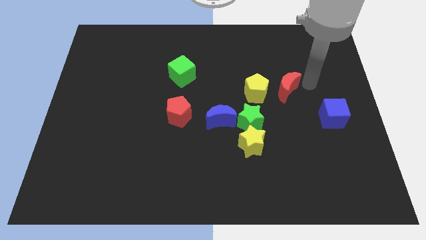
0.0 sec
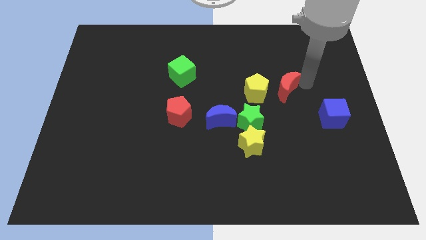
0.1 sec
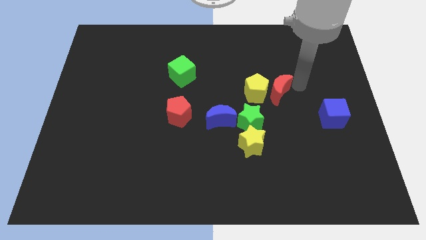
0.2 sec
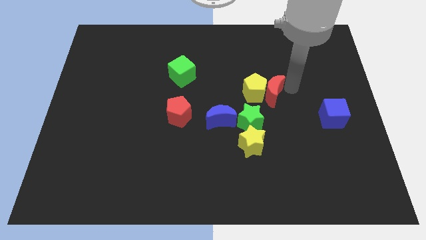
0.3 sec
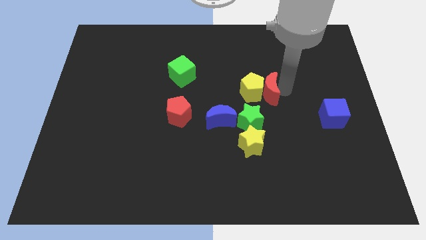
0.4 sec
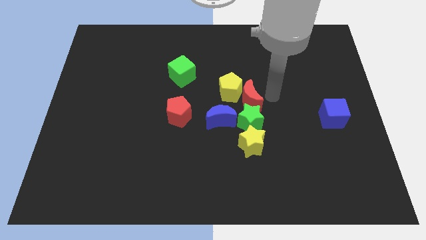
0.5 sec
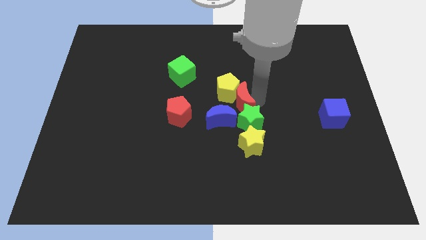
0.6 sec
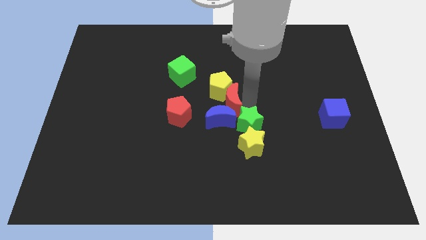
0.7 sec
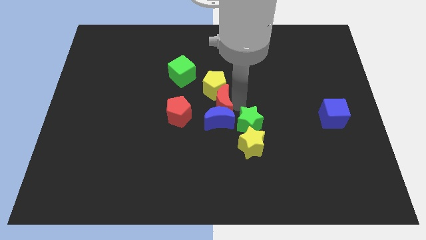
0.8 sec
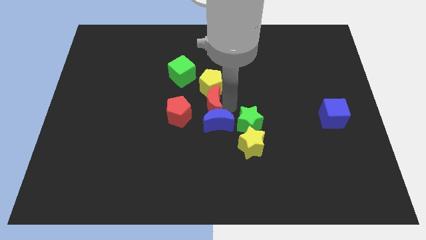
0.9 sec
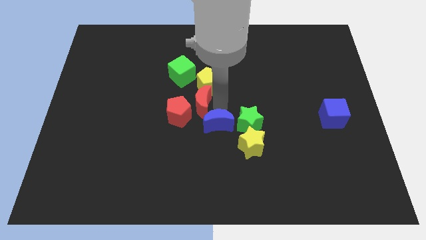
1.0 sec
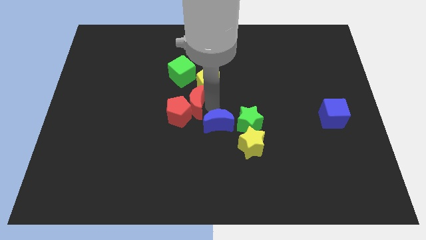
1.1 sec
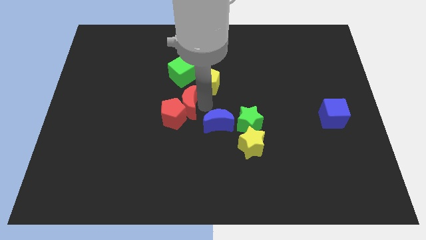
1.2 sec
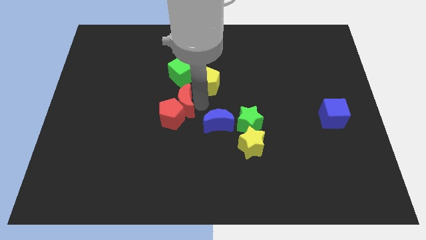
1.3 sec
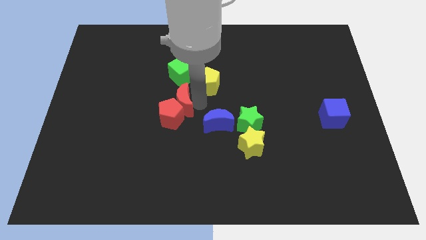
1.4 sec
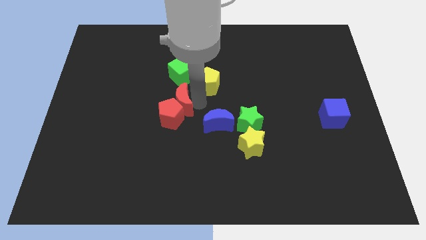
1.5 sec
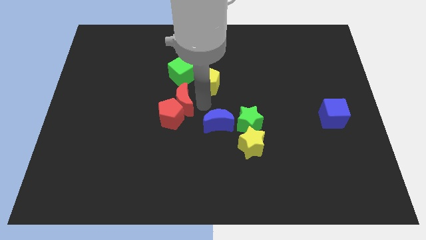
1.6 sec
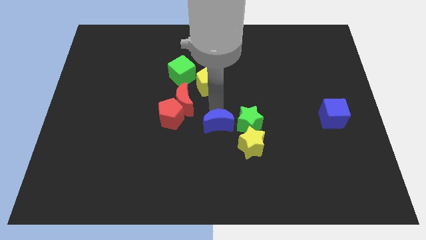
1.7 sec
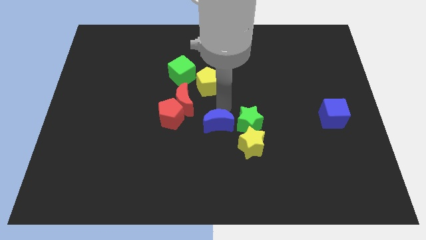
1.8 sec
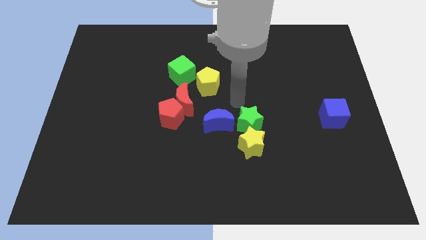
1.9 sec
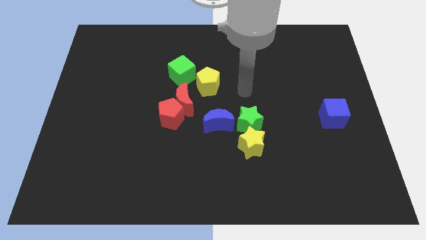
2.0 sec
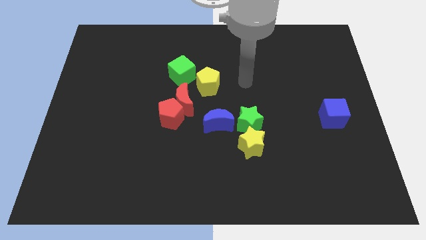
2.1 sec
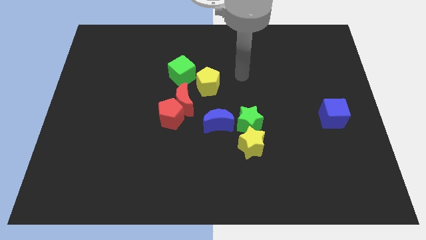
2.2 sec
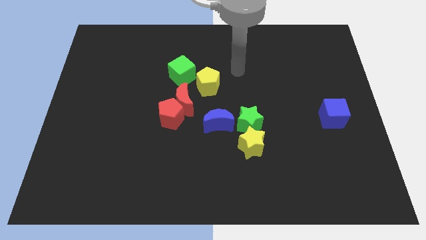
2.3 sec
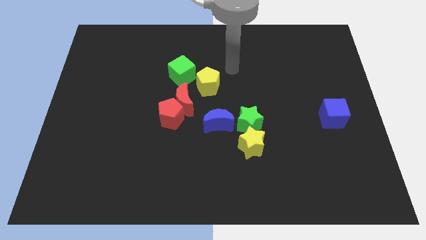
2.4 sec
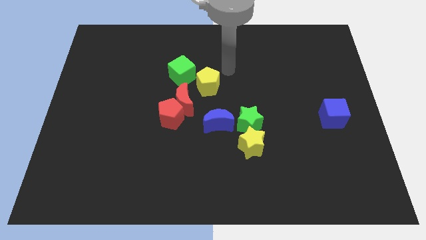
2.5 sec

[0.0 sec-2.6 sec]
move the red crescent left towards the red pentagon

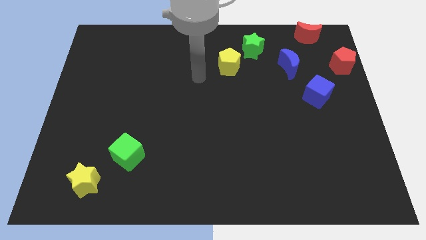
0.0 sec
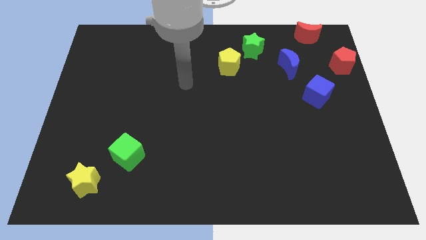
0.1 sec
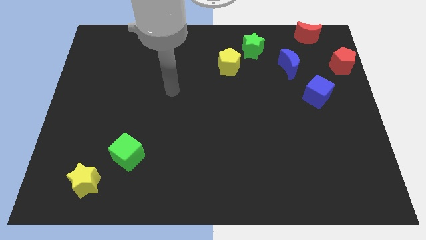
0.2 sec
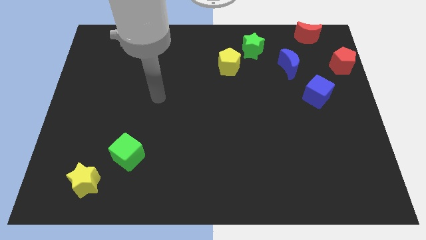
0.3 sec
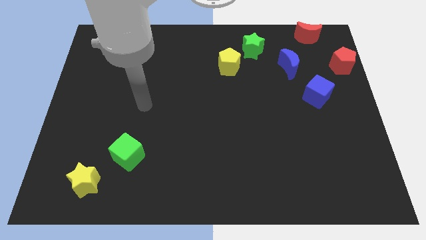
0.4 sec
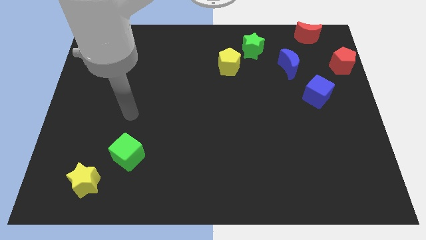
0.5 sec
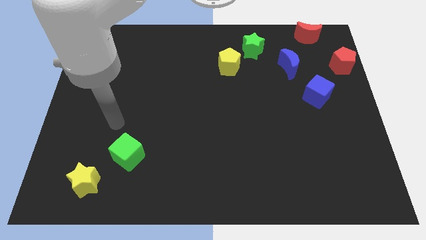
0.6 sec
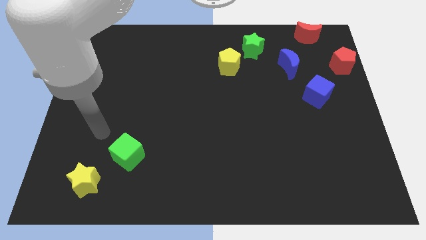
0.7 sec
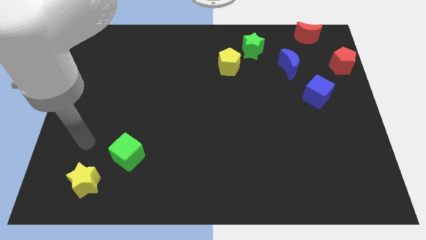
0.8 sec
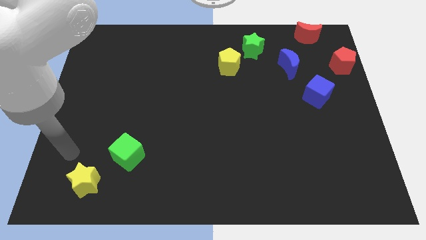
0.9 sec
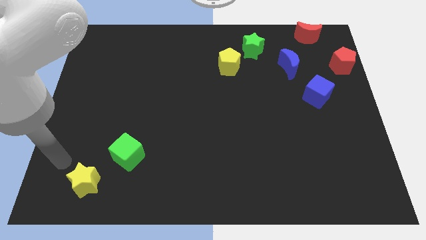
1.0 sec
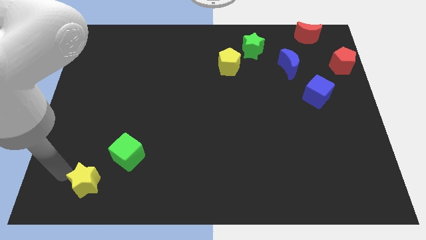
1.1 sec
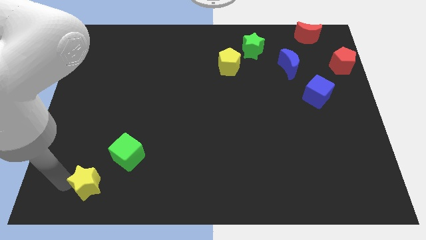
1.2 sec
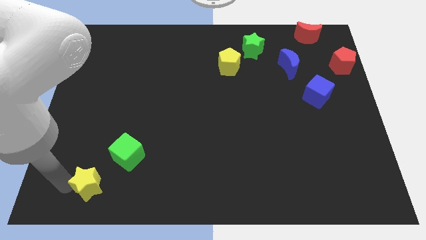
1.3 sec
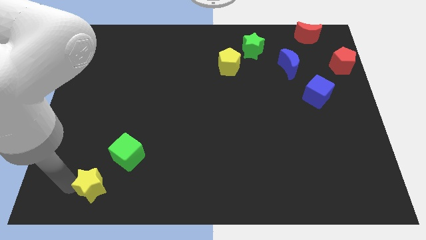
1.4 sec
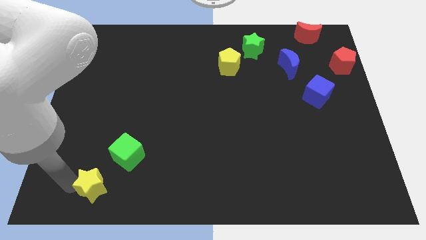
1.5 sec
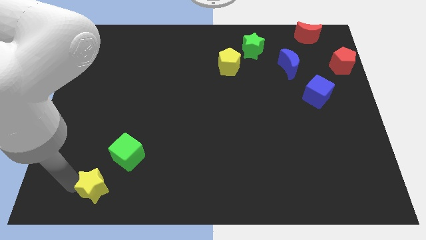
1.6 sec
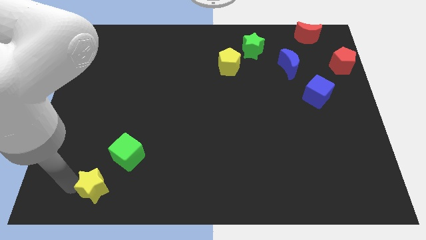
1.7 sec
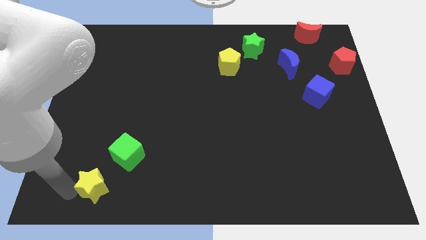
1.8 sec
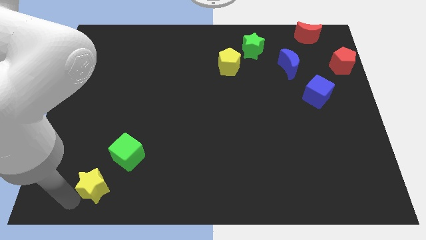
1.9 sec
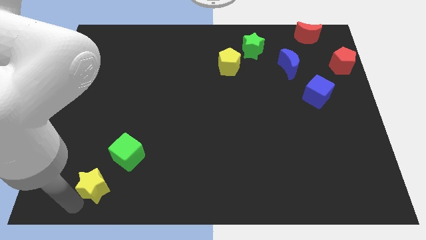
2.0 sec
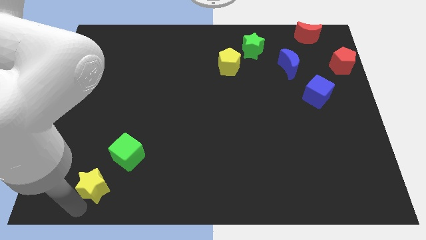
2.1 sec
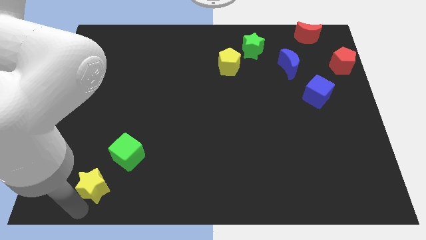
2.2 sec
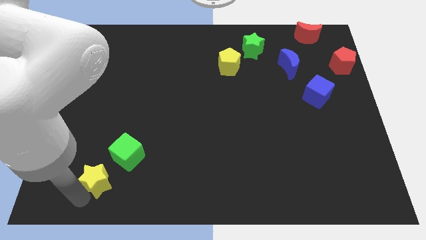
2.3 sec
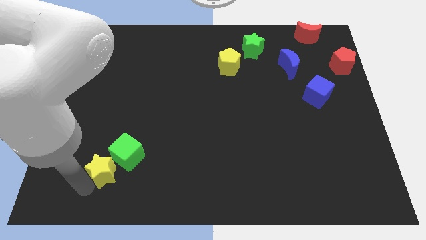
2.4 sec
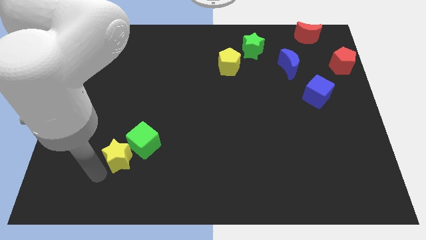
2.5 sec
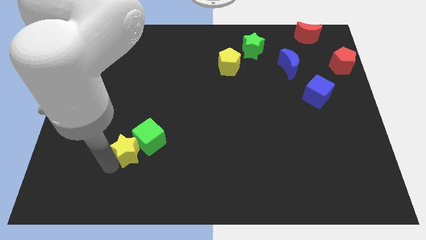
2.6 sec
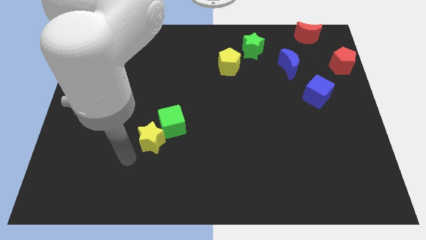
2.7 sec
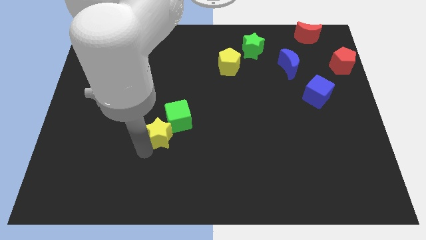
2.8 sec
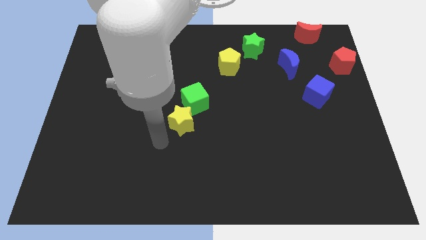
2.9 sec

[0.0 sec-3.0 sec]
push the yellow star into the green cube

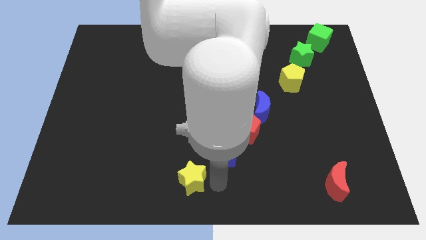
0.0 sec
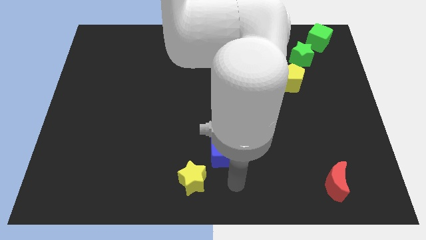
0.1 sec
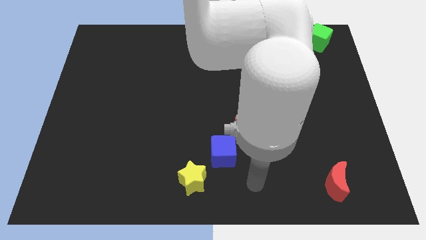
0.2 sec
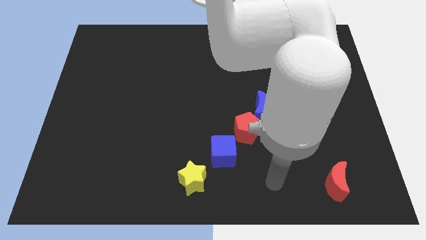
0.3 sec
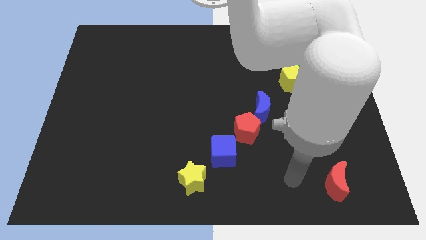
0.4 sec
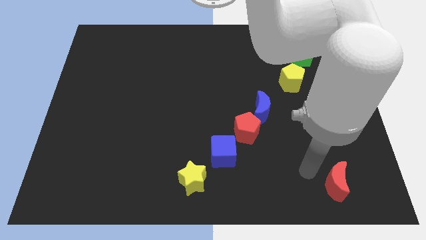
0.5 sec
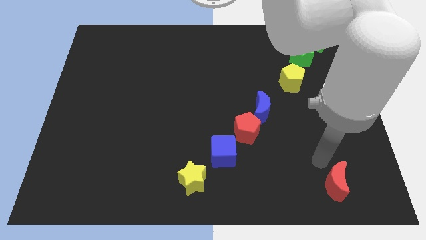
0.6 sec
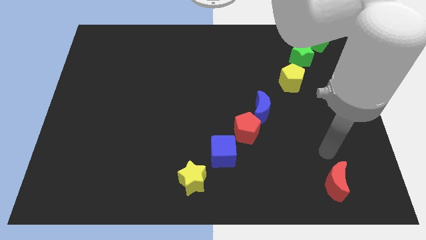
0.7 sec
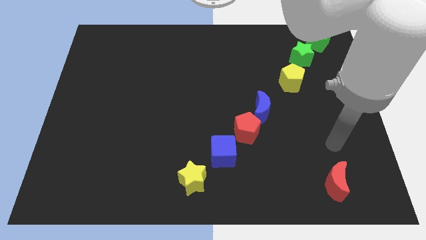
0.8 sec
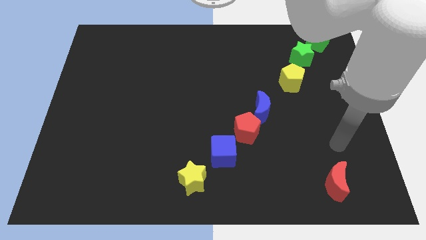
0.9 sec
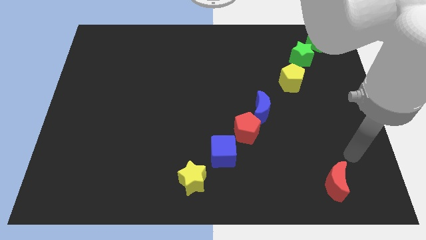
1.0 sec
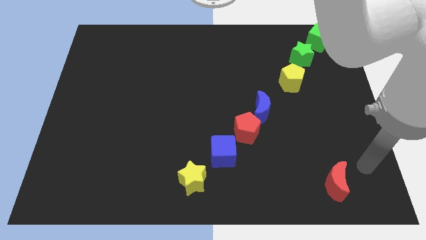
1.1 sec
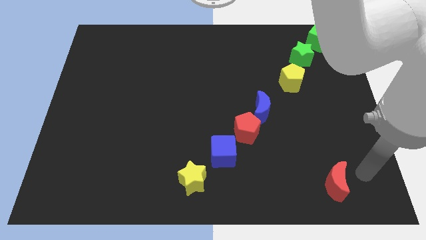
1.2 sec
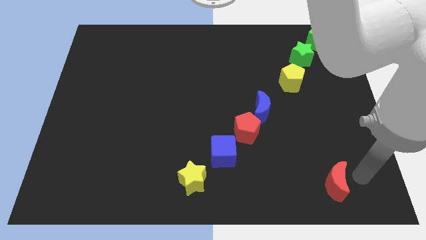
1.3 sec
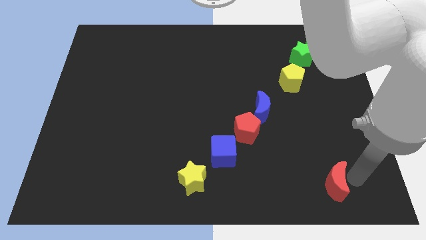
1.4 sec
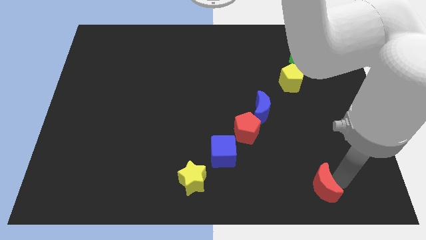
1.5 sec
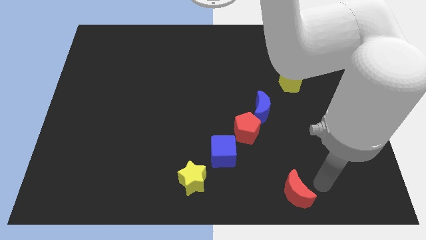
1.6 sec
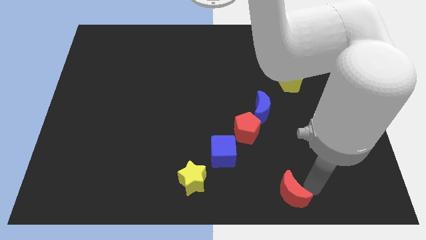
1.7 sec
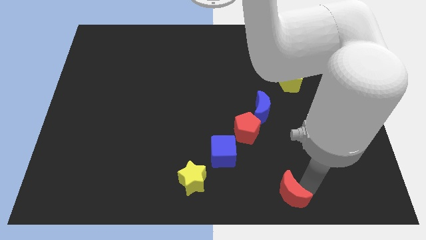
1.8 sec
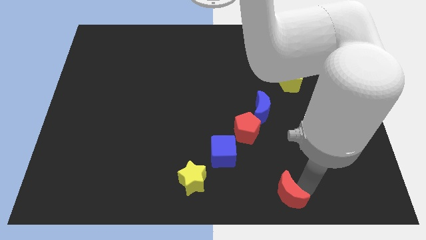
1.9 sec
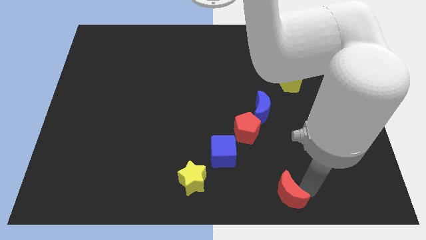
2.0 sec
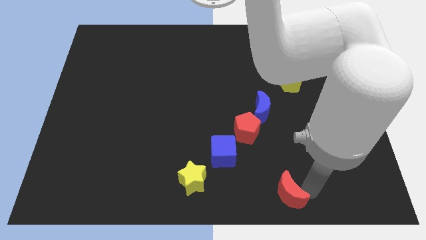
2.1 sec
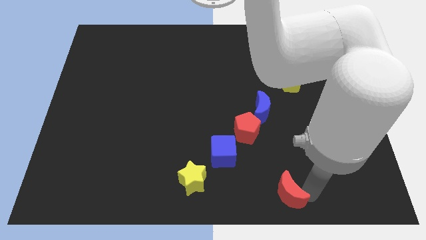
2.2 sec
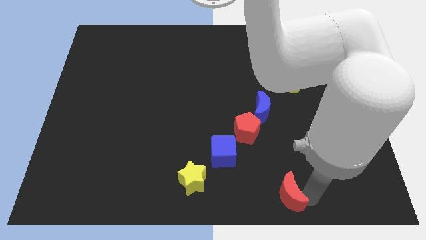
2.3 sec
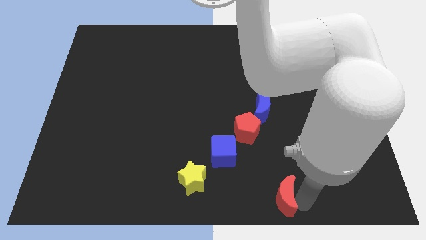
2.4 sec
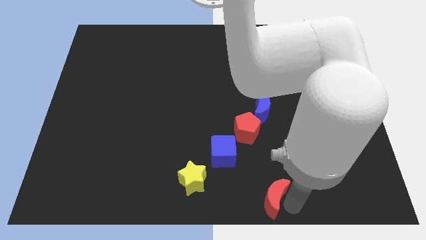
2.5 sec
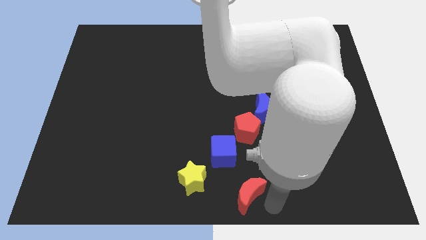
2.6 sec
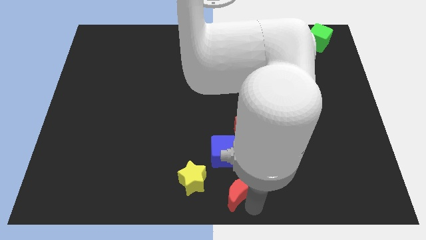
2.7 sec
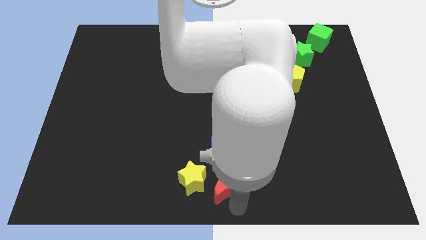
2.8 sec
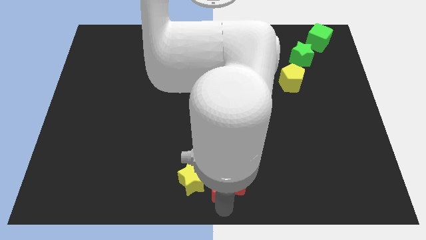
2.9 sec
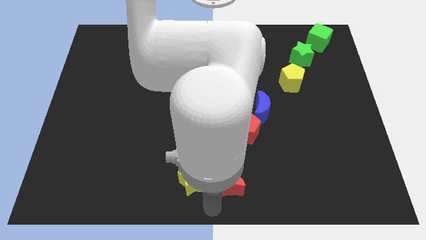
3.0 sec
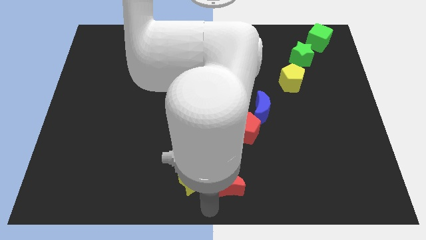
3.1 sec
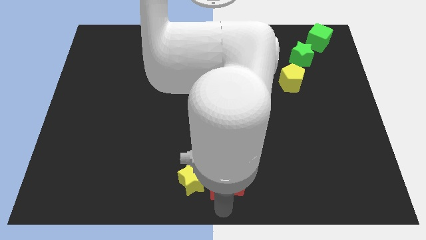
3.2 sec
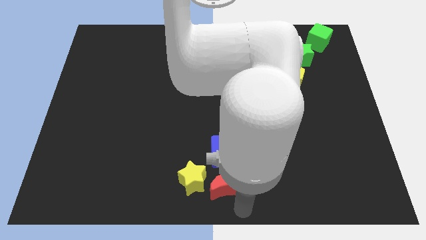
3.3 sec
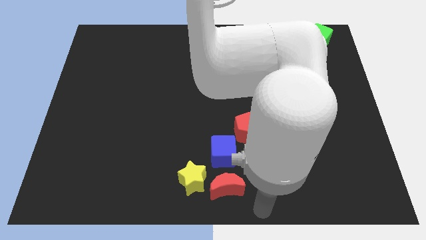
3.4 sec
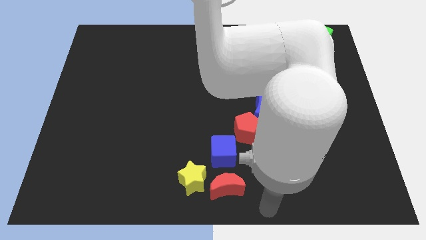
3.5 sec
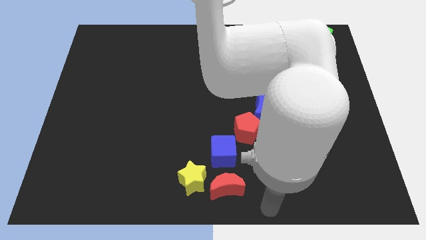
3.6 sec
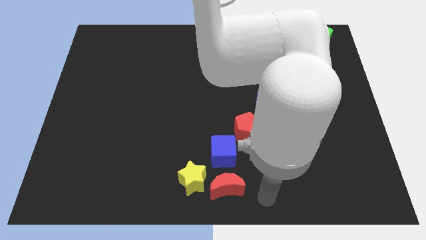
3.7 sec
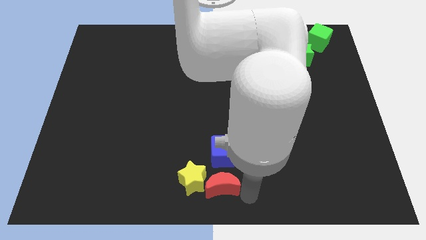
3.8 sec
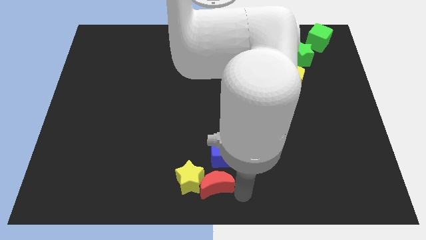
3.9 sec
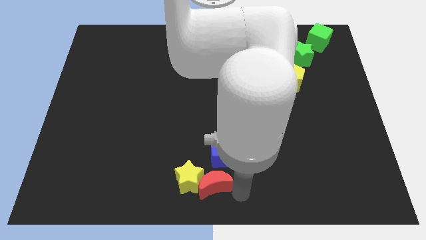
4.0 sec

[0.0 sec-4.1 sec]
move the red crescent into the right side of the yellow star
